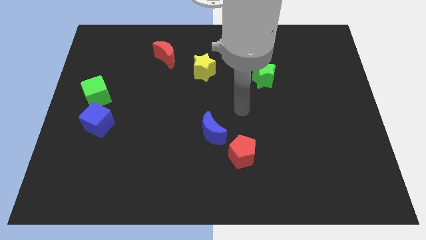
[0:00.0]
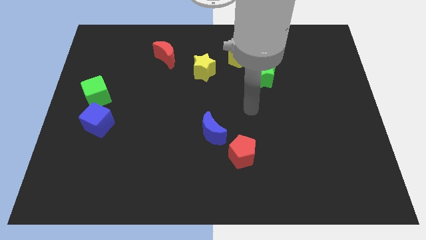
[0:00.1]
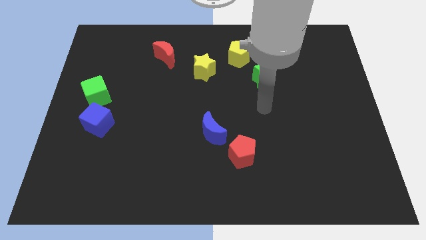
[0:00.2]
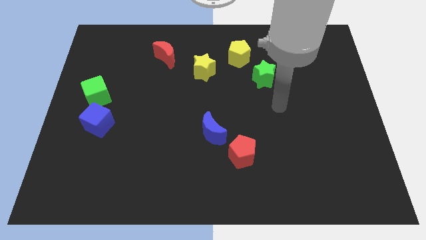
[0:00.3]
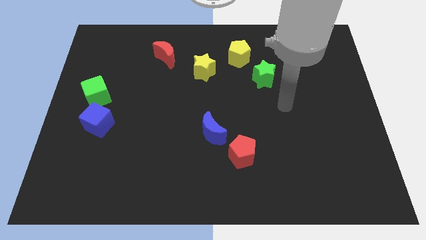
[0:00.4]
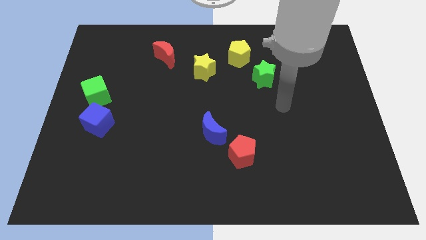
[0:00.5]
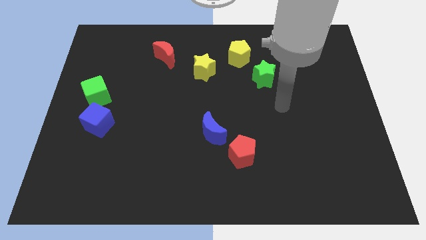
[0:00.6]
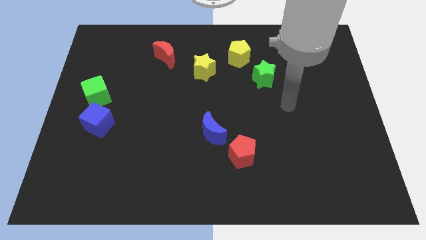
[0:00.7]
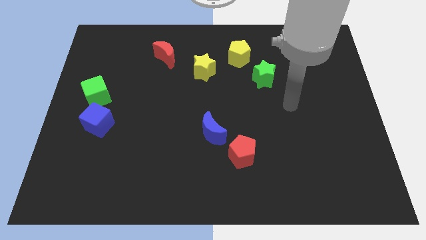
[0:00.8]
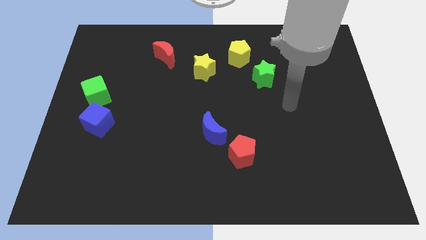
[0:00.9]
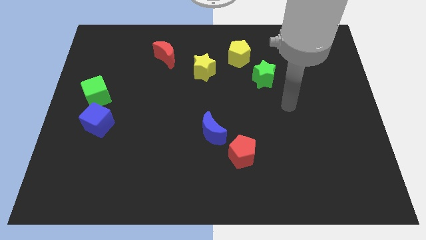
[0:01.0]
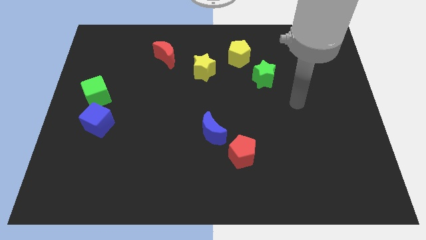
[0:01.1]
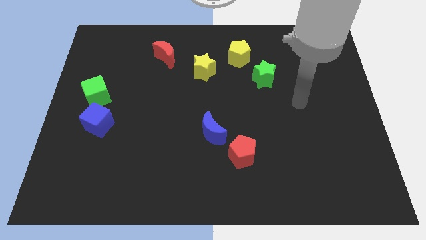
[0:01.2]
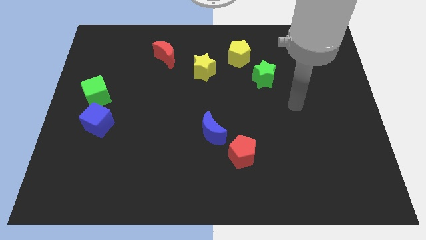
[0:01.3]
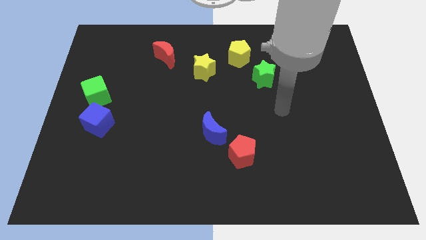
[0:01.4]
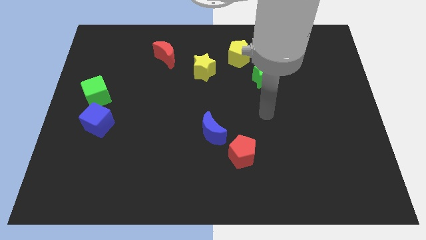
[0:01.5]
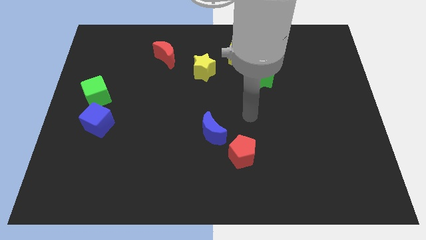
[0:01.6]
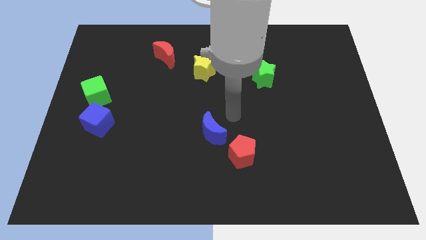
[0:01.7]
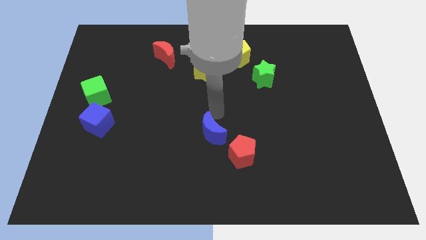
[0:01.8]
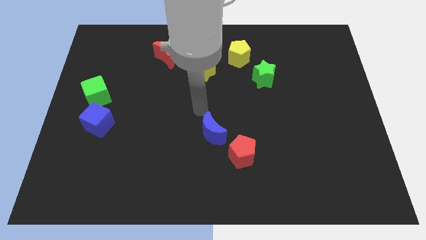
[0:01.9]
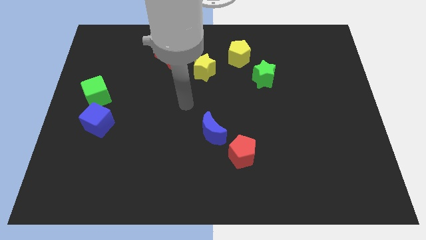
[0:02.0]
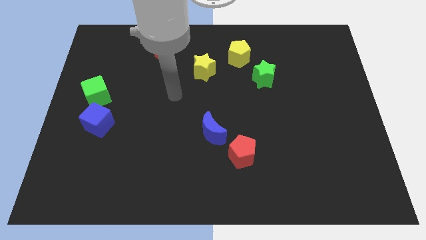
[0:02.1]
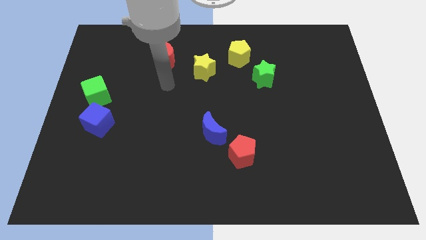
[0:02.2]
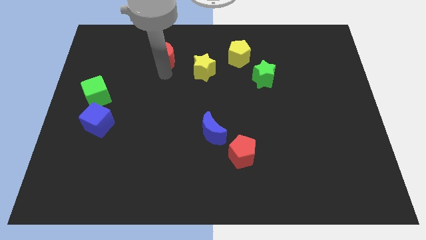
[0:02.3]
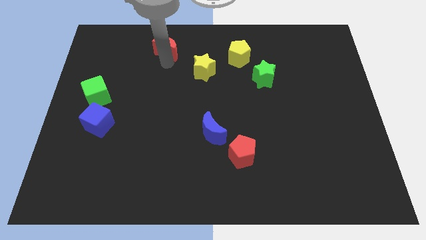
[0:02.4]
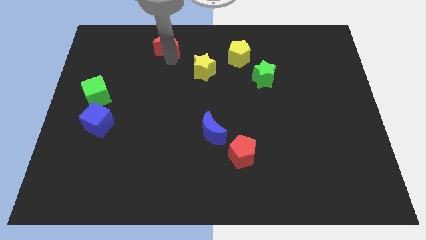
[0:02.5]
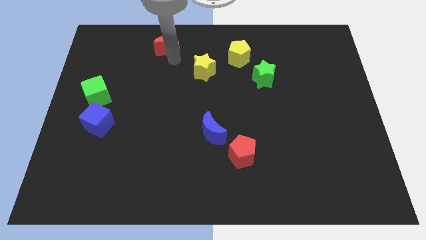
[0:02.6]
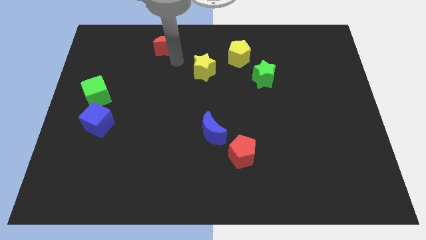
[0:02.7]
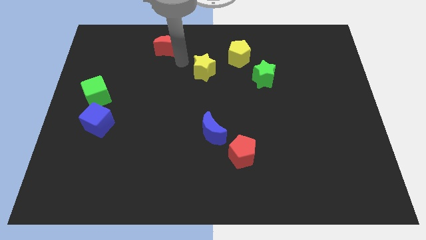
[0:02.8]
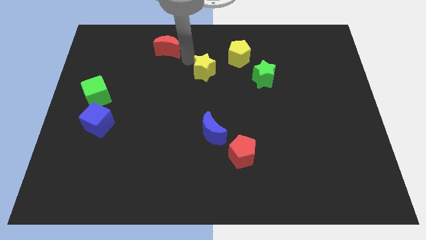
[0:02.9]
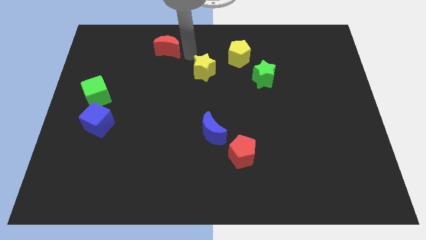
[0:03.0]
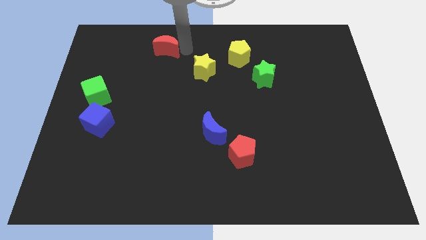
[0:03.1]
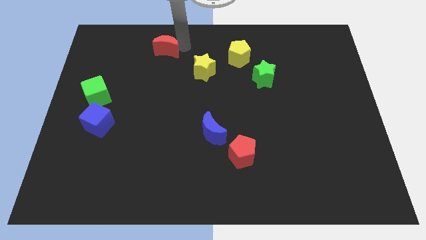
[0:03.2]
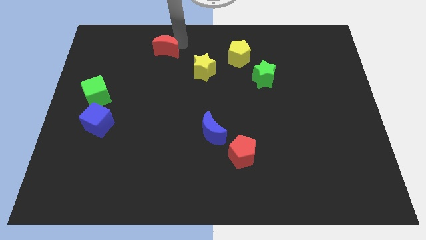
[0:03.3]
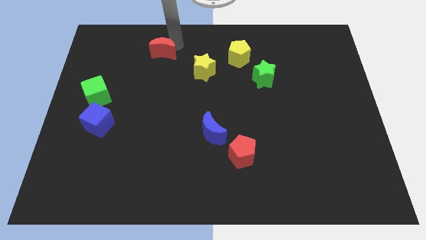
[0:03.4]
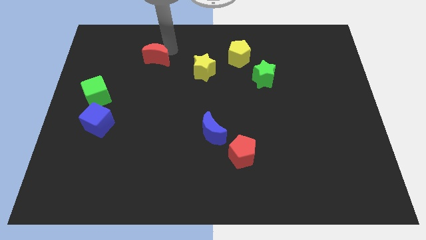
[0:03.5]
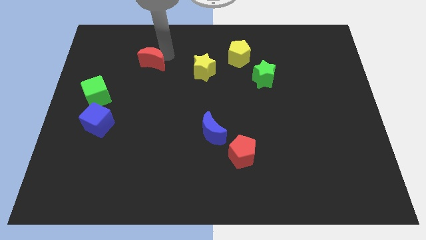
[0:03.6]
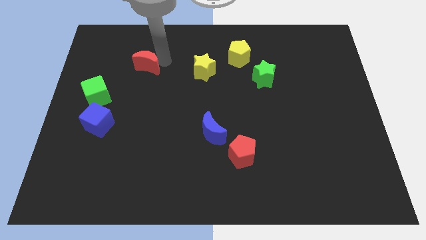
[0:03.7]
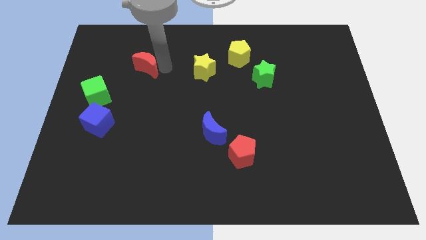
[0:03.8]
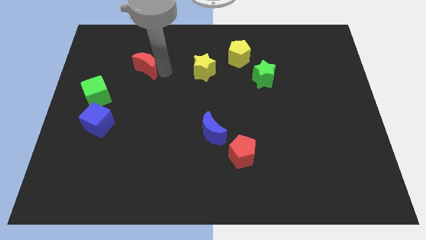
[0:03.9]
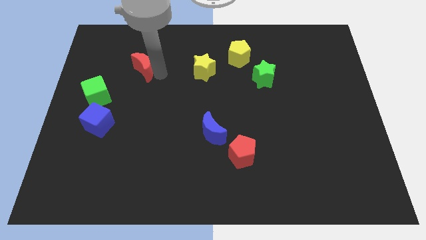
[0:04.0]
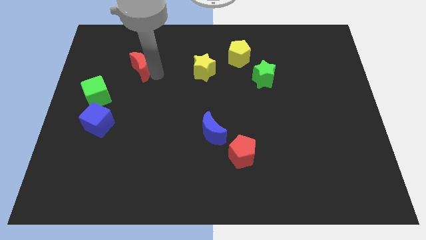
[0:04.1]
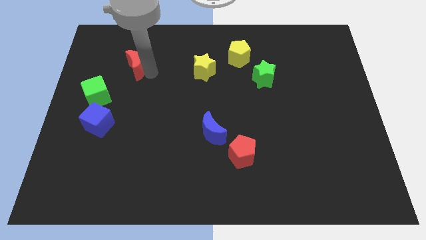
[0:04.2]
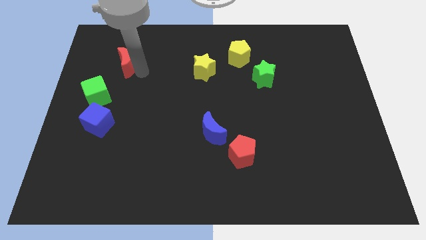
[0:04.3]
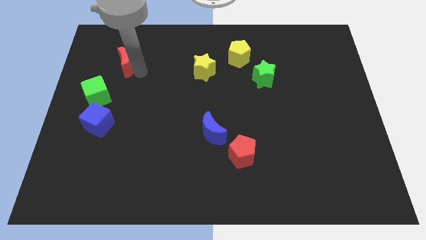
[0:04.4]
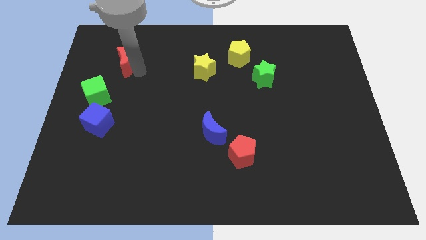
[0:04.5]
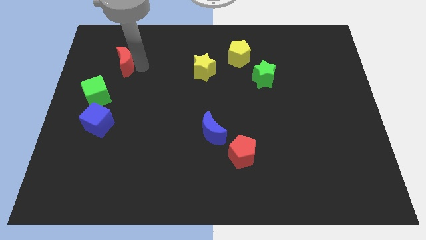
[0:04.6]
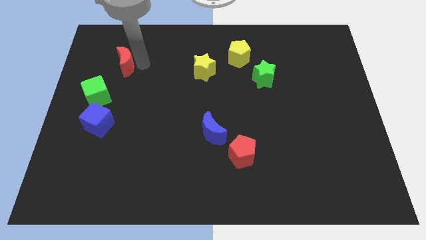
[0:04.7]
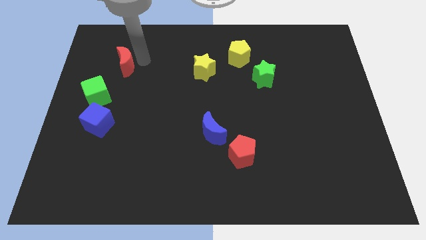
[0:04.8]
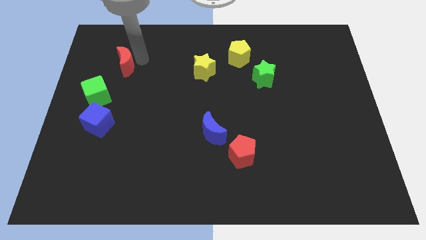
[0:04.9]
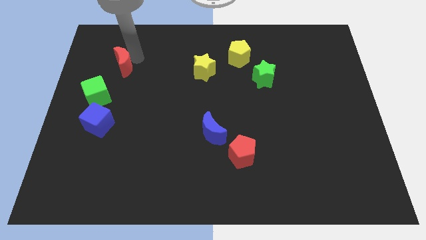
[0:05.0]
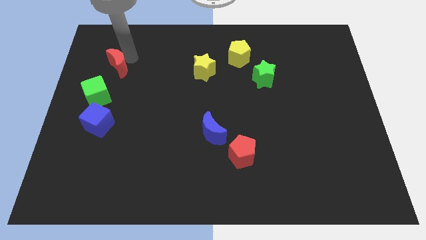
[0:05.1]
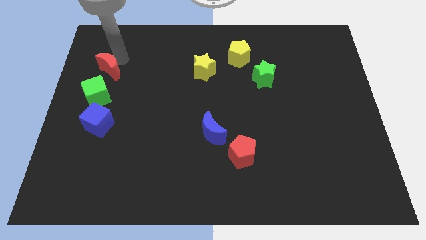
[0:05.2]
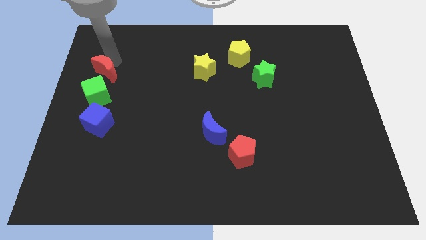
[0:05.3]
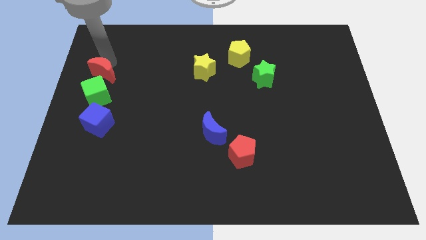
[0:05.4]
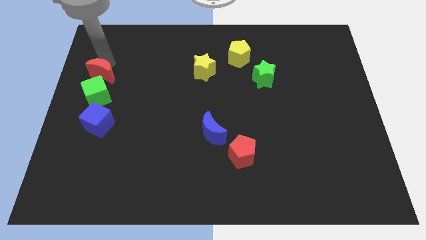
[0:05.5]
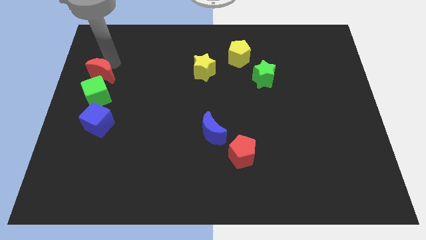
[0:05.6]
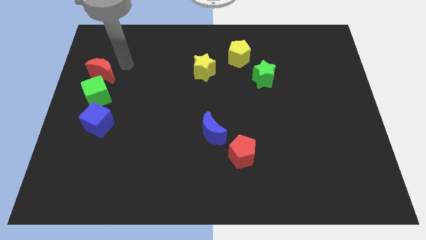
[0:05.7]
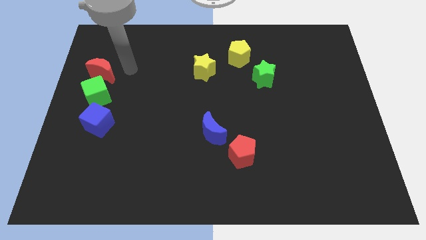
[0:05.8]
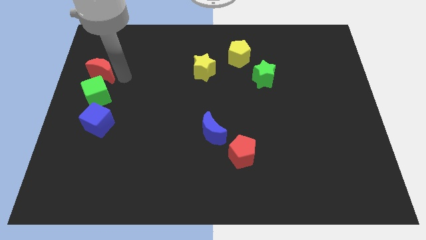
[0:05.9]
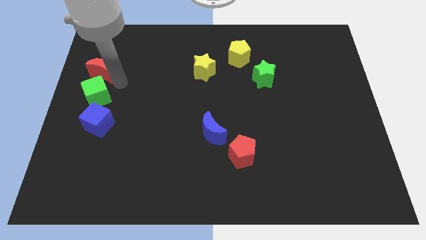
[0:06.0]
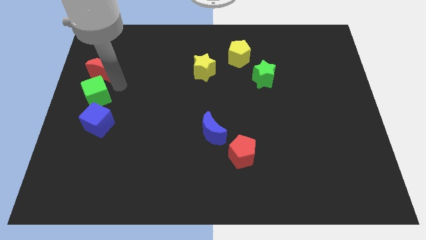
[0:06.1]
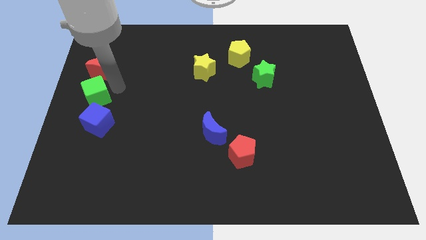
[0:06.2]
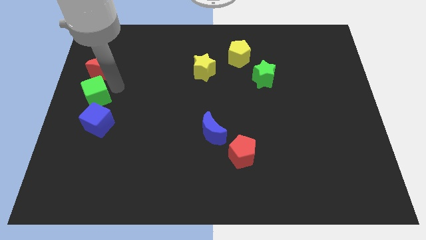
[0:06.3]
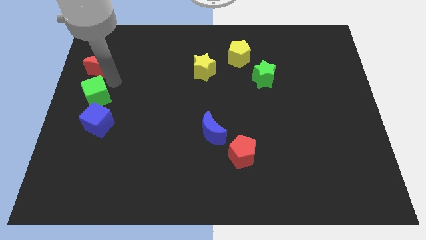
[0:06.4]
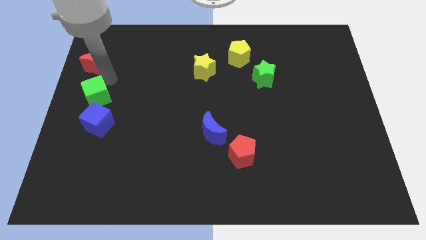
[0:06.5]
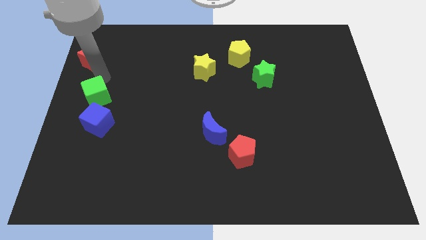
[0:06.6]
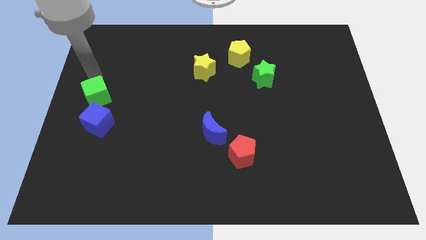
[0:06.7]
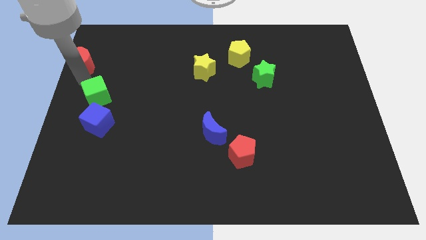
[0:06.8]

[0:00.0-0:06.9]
place the red moon above the green cube

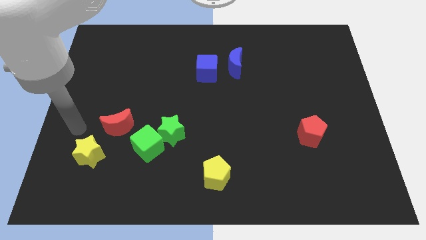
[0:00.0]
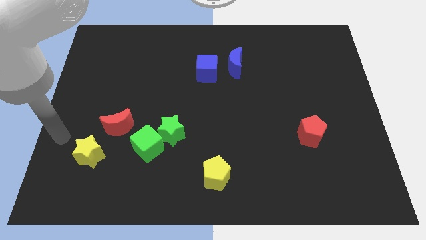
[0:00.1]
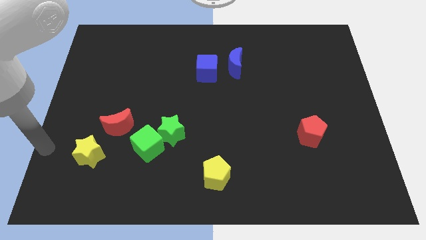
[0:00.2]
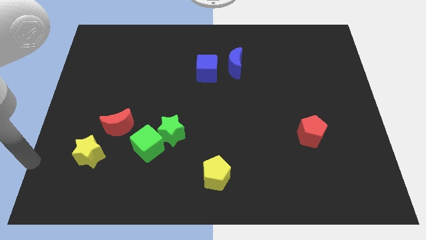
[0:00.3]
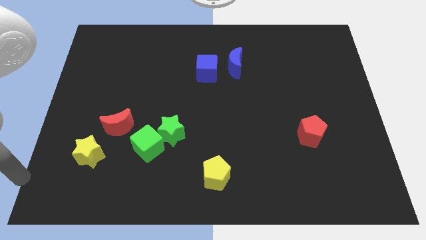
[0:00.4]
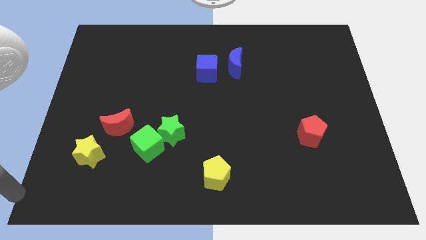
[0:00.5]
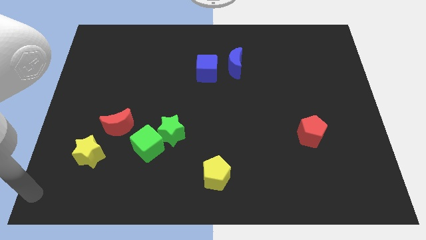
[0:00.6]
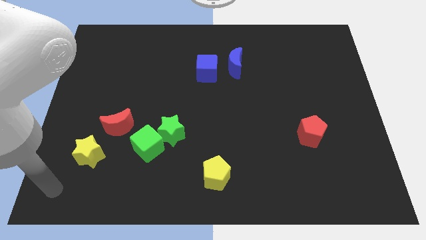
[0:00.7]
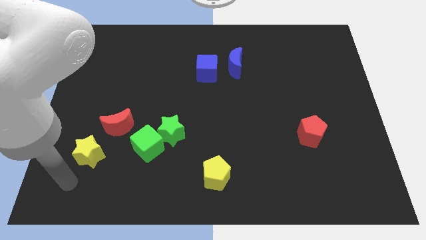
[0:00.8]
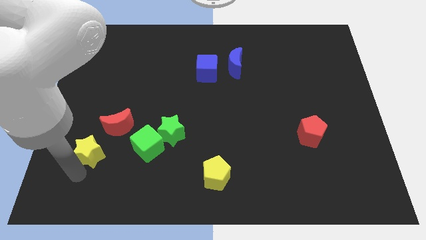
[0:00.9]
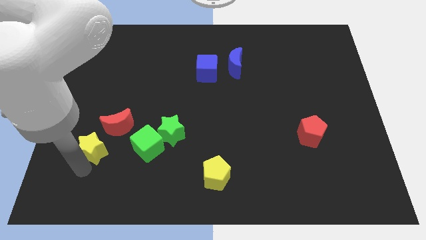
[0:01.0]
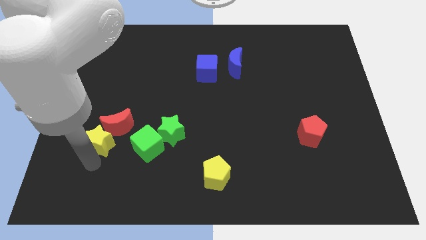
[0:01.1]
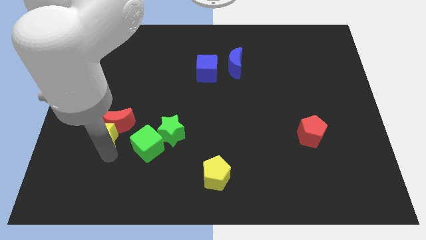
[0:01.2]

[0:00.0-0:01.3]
move the yellow star into red crescent

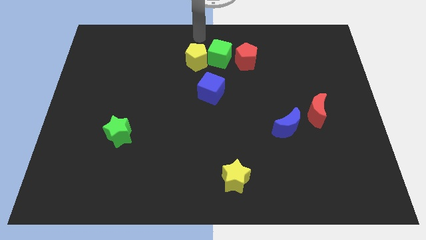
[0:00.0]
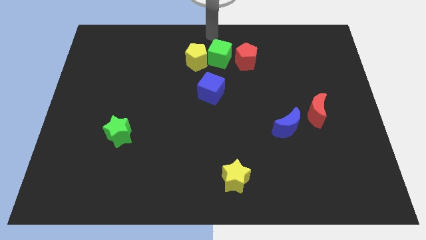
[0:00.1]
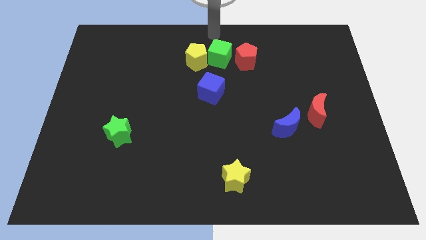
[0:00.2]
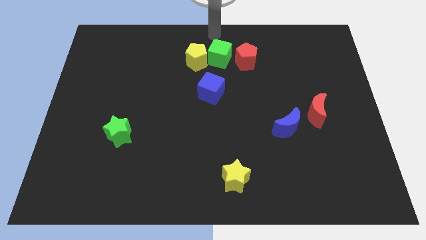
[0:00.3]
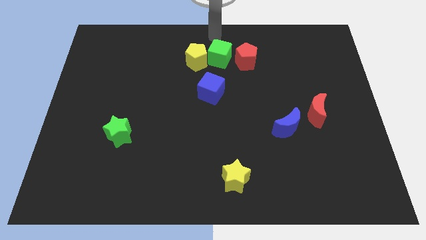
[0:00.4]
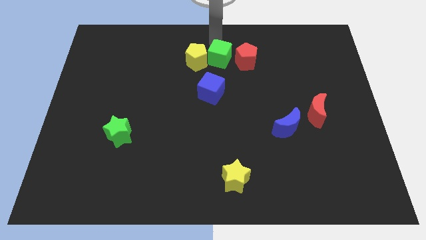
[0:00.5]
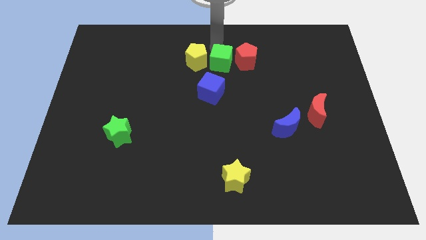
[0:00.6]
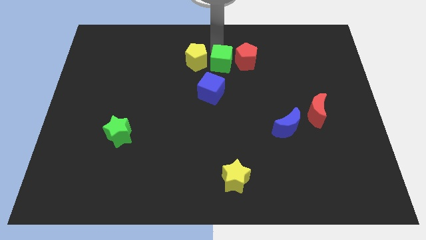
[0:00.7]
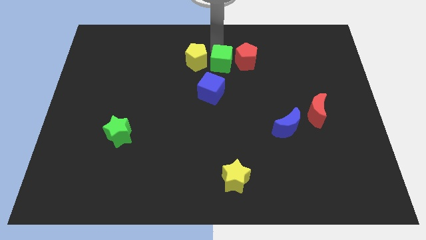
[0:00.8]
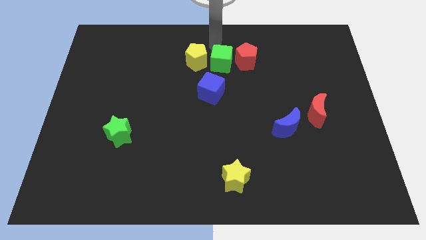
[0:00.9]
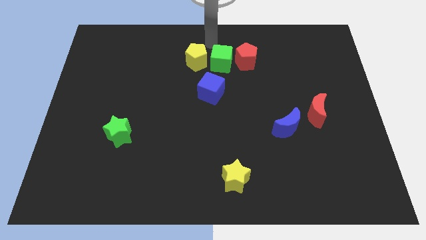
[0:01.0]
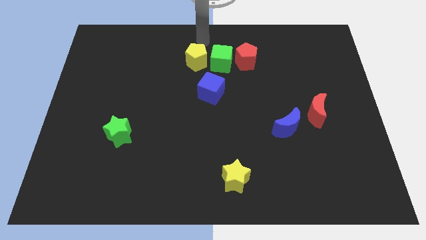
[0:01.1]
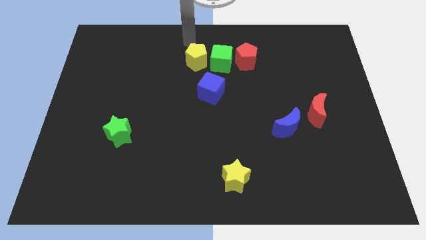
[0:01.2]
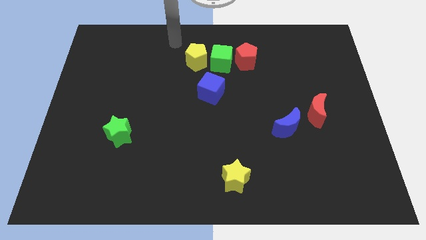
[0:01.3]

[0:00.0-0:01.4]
slightly push green cube towards its bottom
